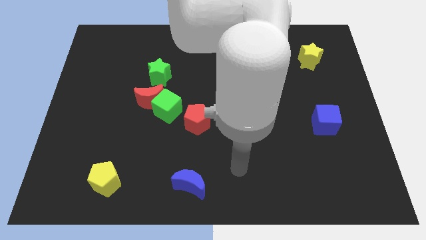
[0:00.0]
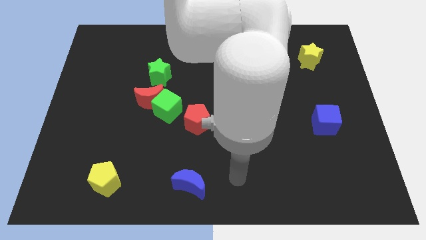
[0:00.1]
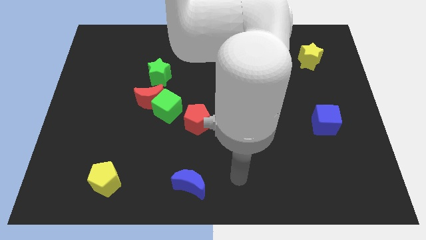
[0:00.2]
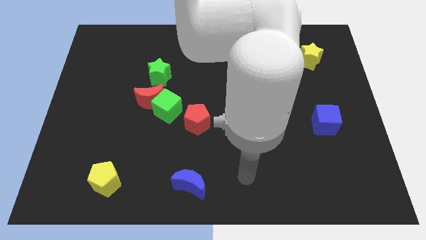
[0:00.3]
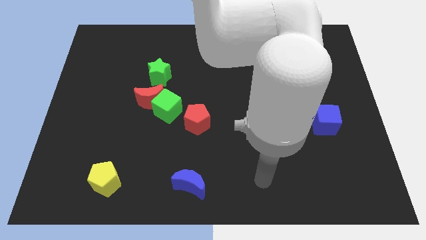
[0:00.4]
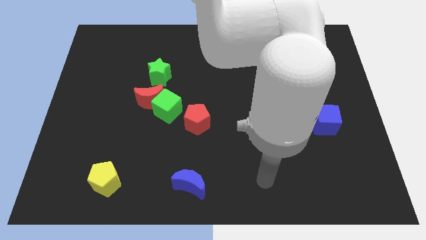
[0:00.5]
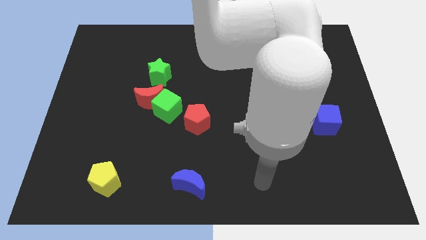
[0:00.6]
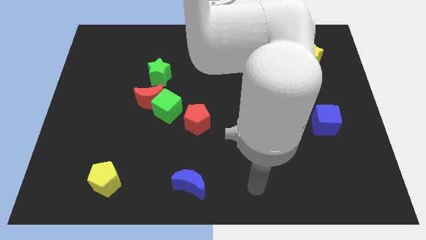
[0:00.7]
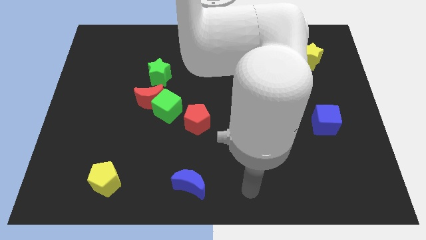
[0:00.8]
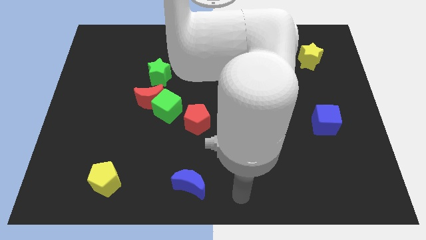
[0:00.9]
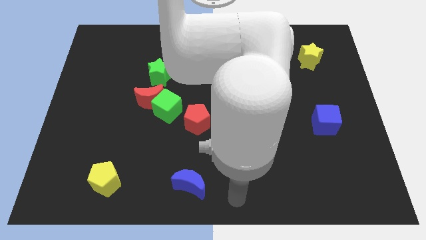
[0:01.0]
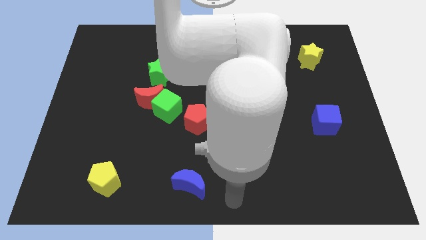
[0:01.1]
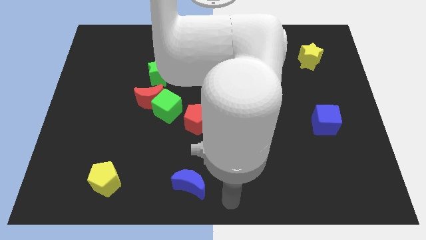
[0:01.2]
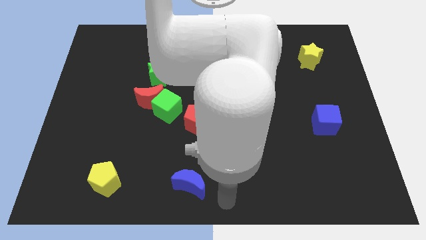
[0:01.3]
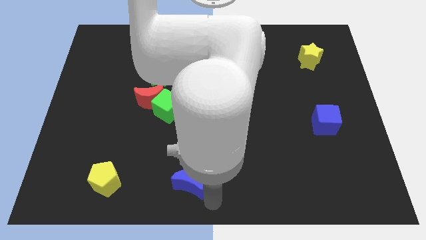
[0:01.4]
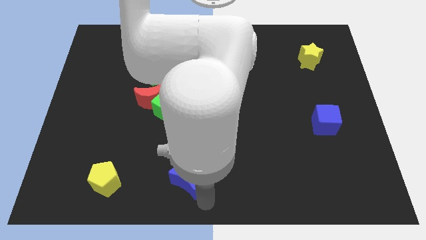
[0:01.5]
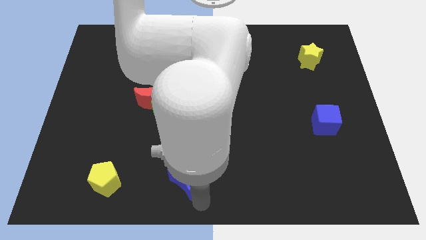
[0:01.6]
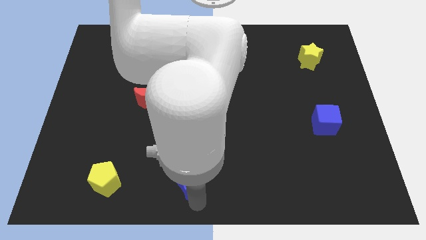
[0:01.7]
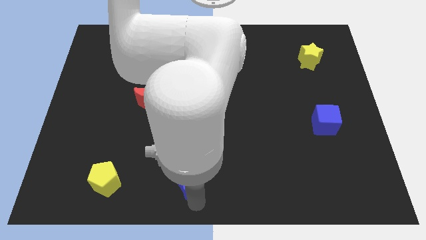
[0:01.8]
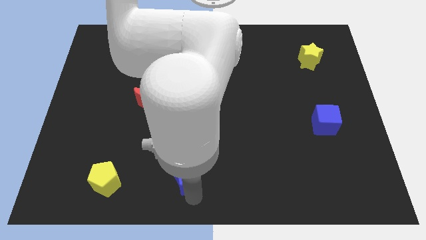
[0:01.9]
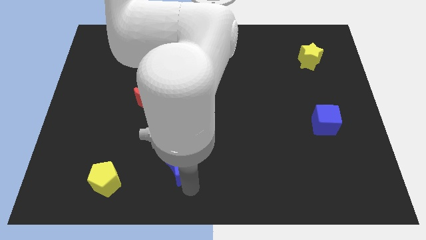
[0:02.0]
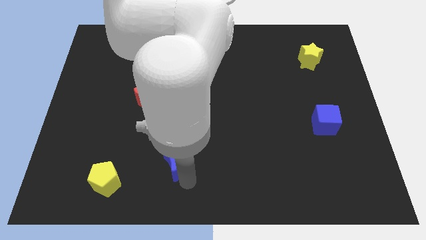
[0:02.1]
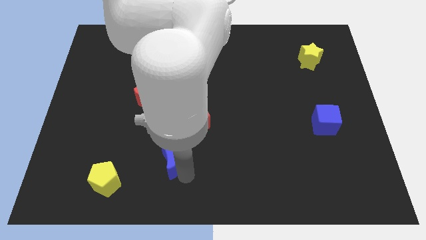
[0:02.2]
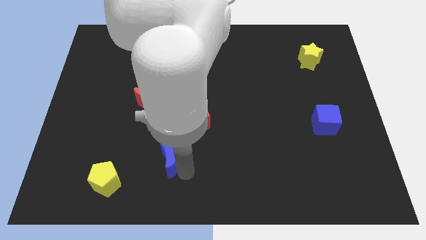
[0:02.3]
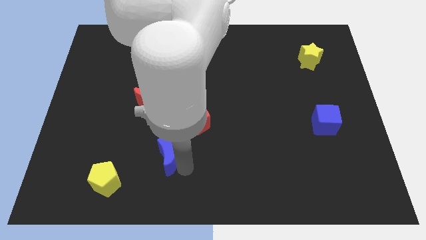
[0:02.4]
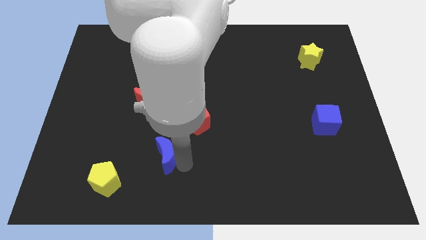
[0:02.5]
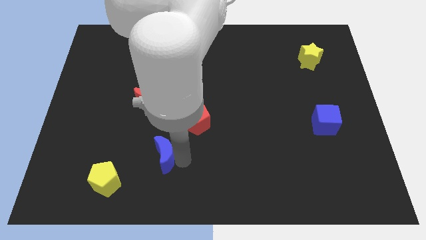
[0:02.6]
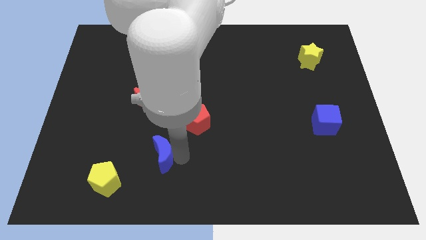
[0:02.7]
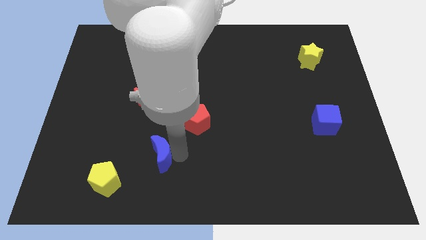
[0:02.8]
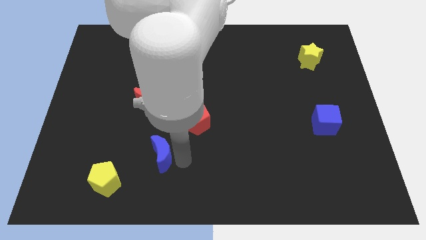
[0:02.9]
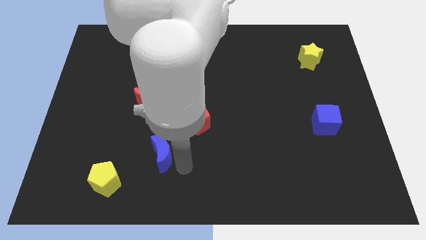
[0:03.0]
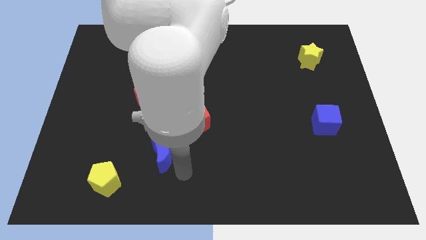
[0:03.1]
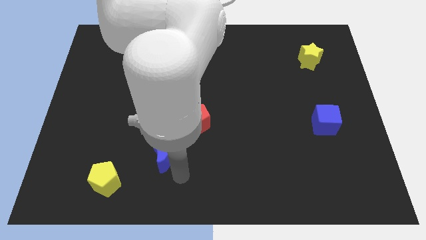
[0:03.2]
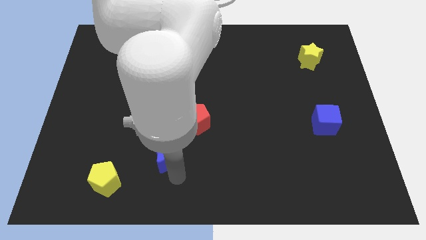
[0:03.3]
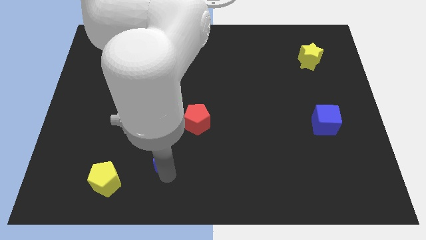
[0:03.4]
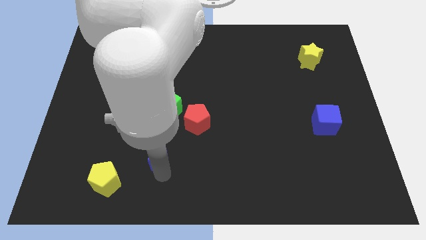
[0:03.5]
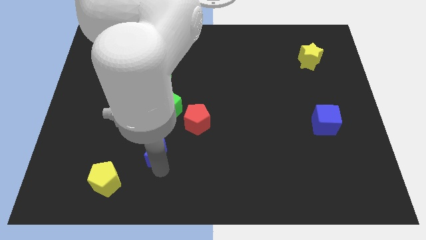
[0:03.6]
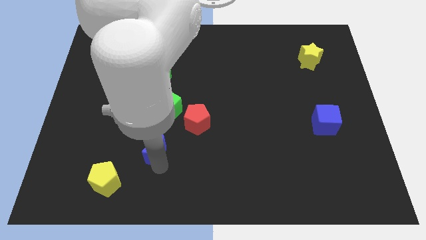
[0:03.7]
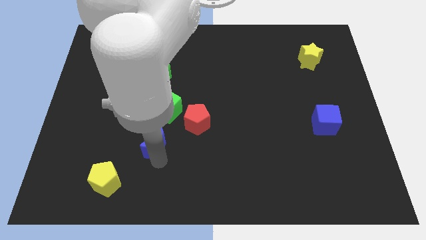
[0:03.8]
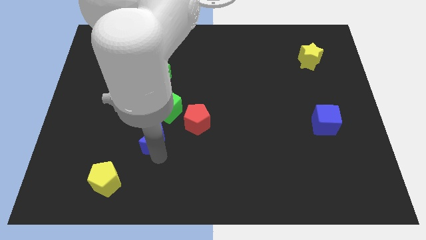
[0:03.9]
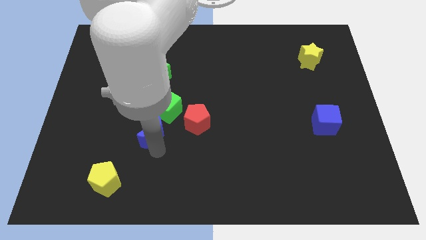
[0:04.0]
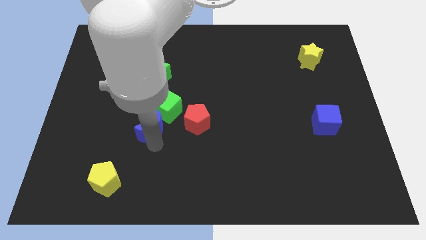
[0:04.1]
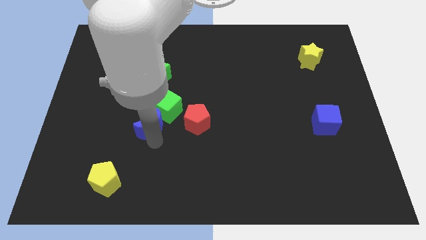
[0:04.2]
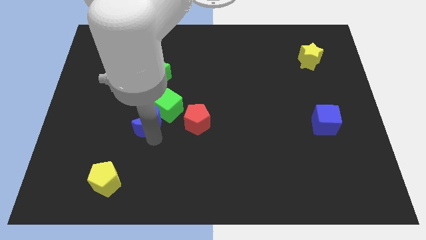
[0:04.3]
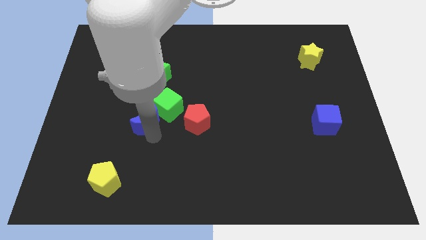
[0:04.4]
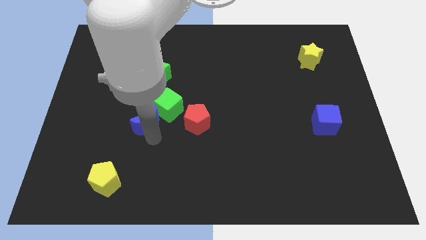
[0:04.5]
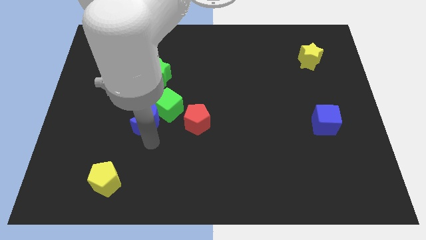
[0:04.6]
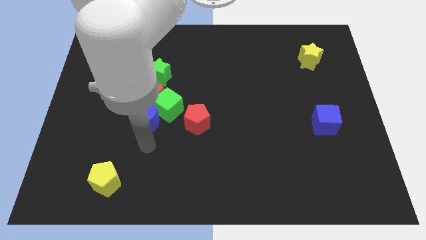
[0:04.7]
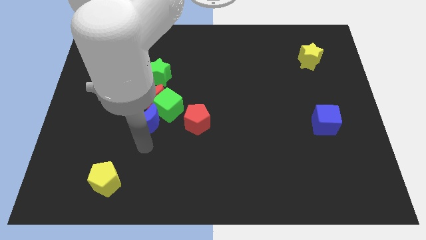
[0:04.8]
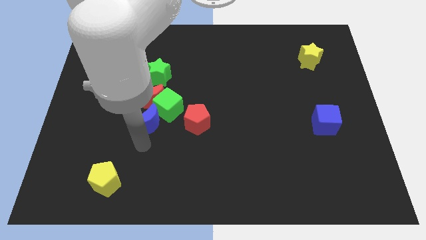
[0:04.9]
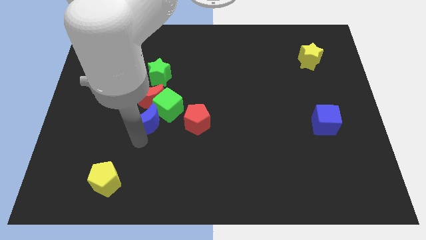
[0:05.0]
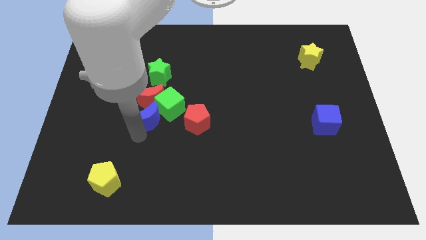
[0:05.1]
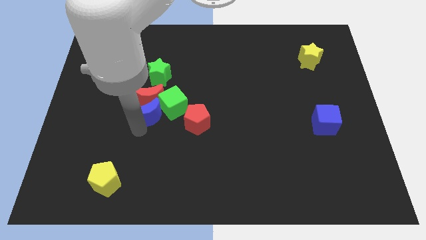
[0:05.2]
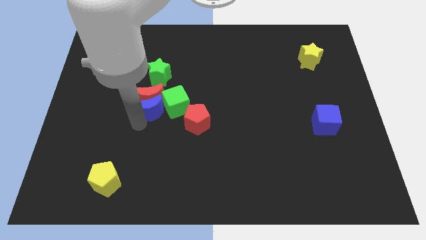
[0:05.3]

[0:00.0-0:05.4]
slide the blue moon next to the red moon

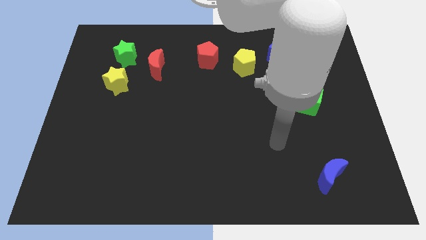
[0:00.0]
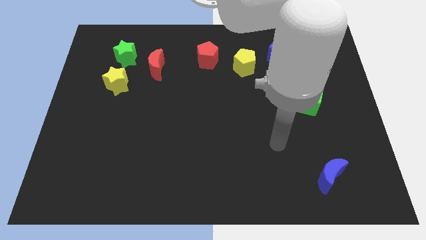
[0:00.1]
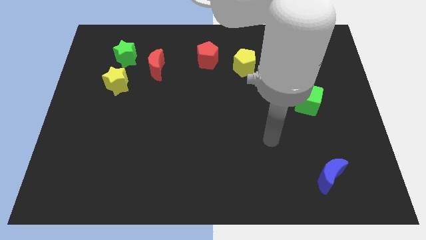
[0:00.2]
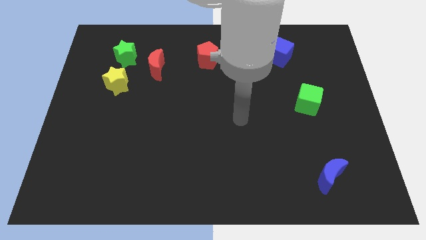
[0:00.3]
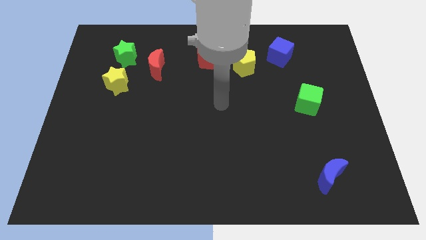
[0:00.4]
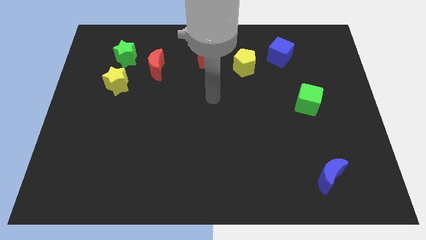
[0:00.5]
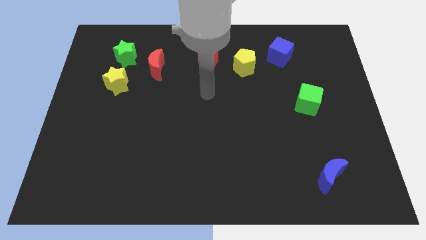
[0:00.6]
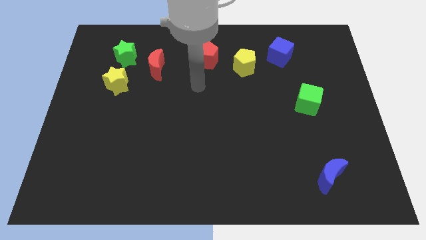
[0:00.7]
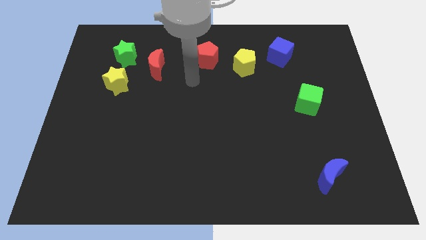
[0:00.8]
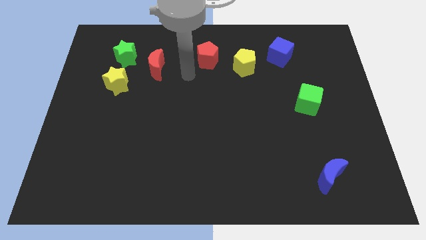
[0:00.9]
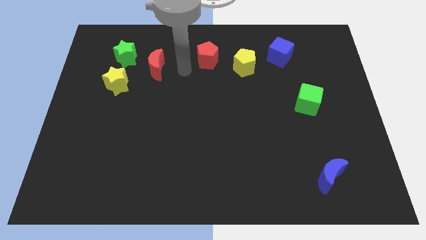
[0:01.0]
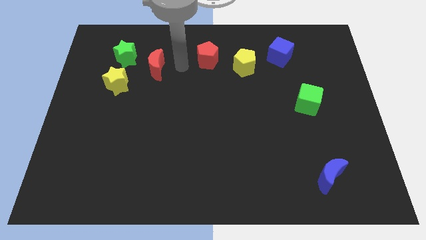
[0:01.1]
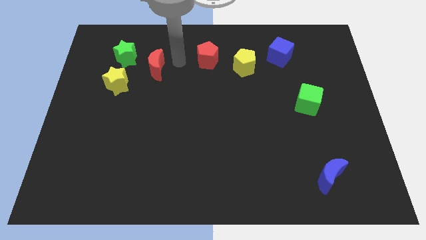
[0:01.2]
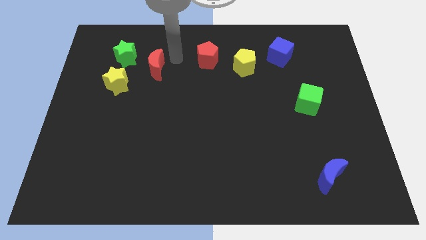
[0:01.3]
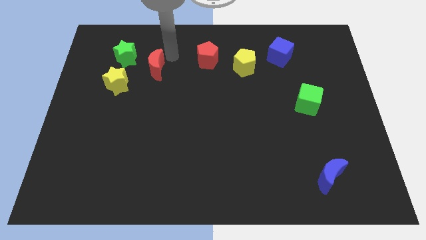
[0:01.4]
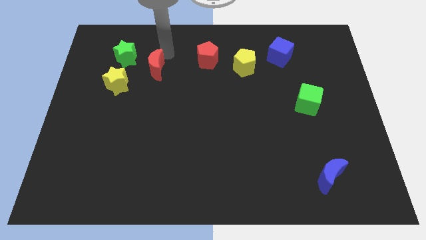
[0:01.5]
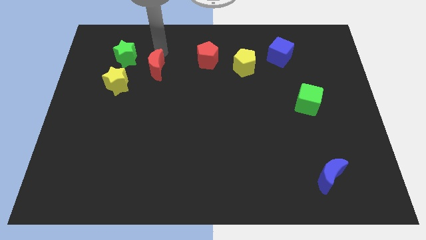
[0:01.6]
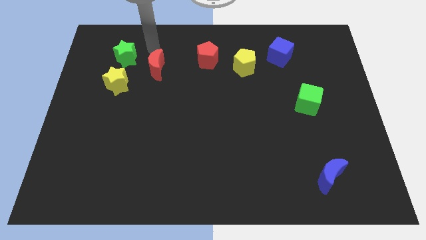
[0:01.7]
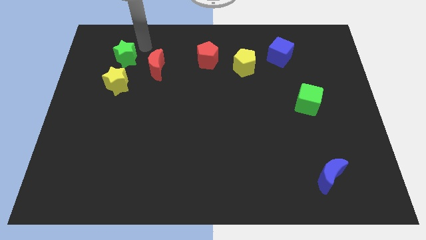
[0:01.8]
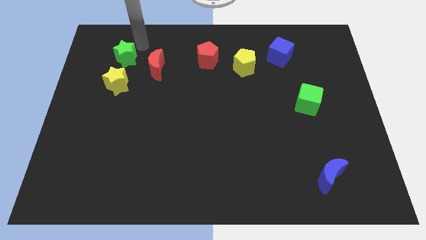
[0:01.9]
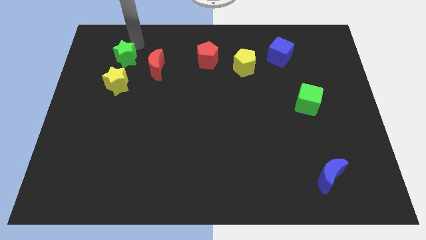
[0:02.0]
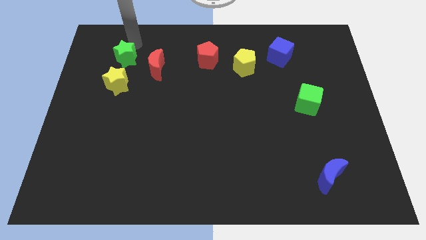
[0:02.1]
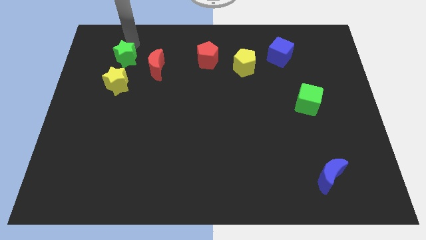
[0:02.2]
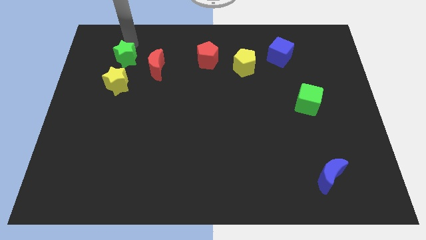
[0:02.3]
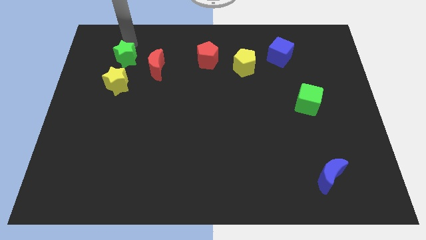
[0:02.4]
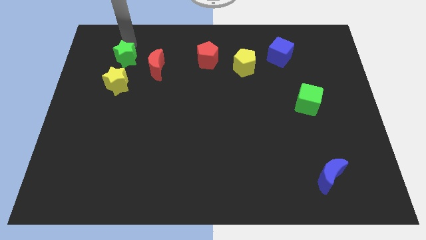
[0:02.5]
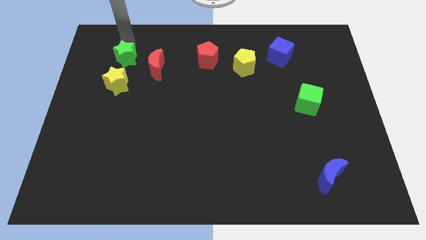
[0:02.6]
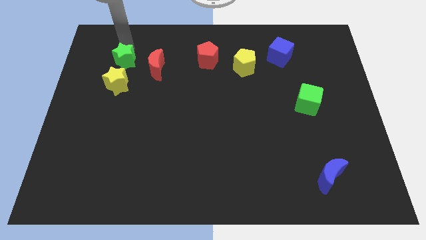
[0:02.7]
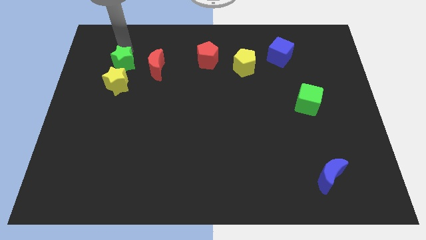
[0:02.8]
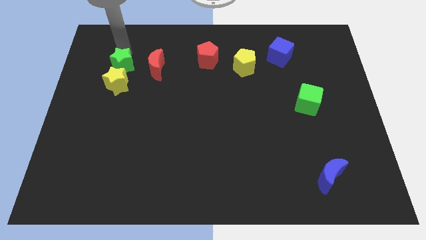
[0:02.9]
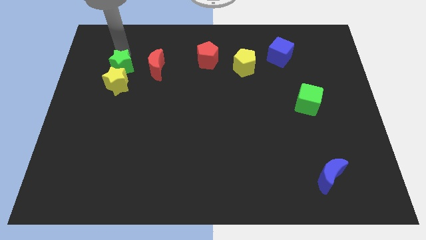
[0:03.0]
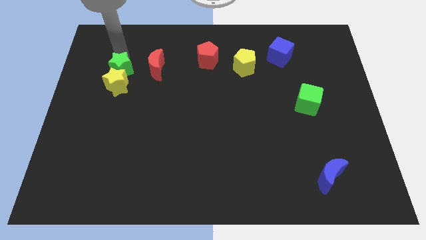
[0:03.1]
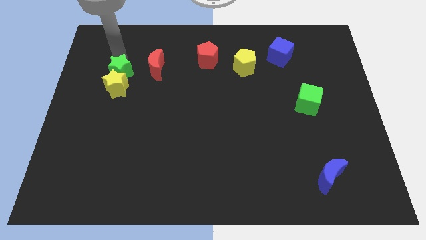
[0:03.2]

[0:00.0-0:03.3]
move the green star to the yellow star
